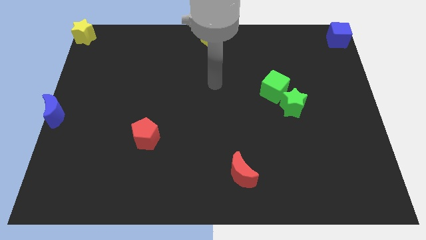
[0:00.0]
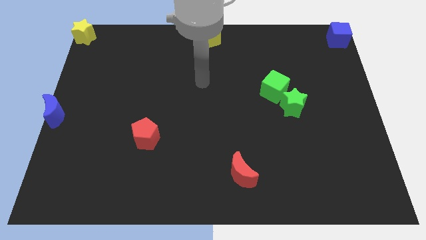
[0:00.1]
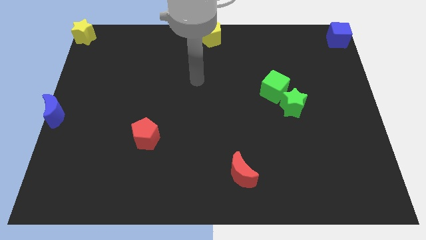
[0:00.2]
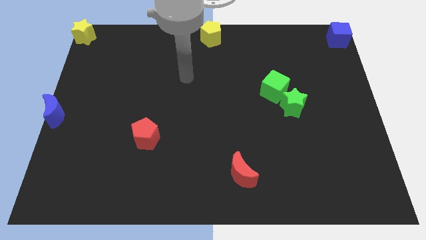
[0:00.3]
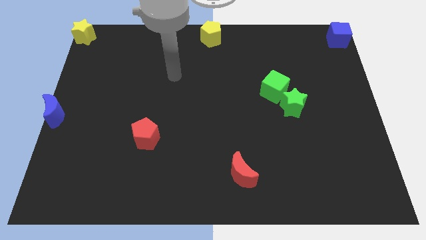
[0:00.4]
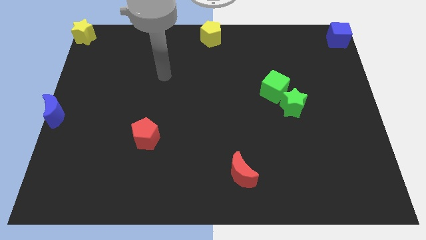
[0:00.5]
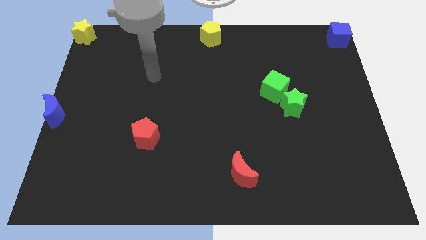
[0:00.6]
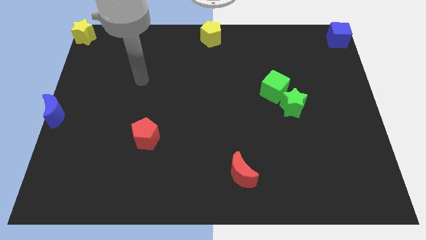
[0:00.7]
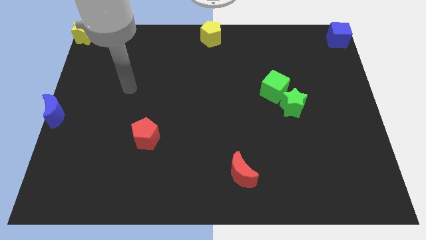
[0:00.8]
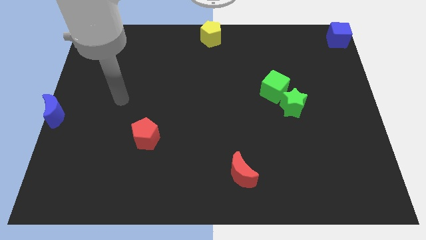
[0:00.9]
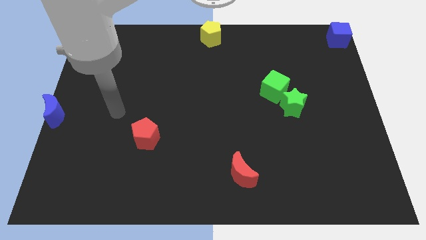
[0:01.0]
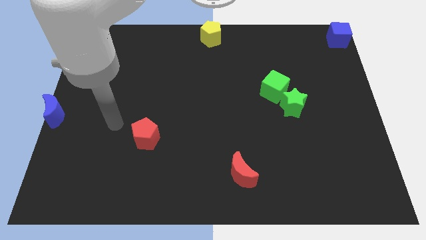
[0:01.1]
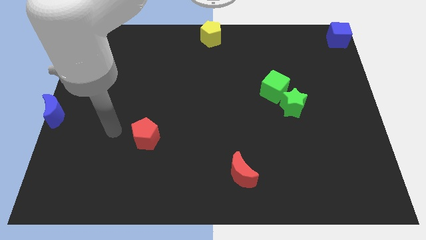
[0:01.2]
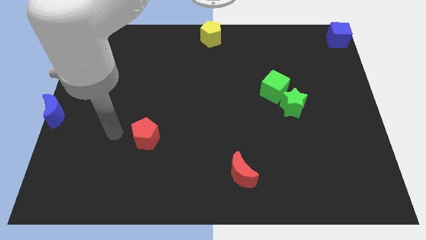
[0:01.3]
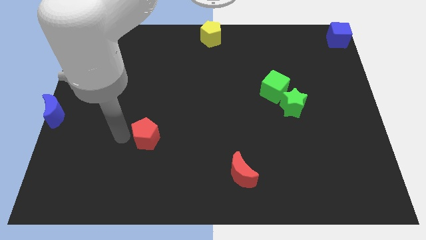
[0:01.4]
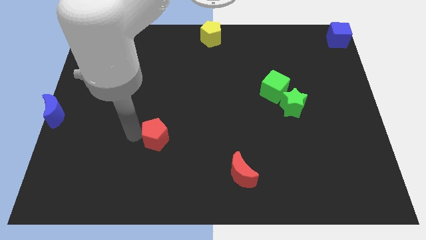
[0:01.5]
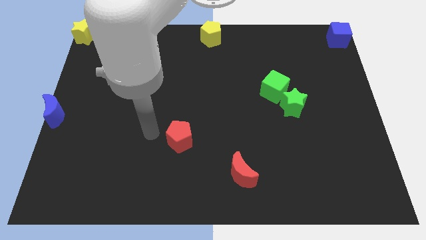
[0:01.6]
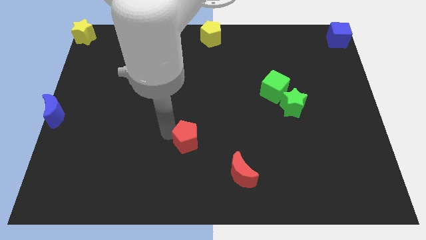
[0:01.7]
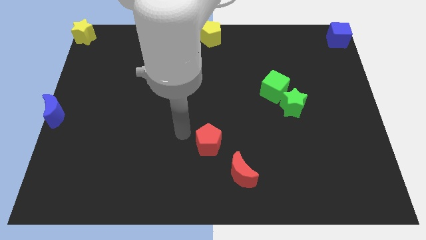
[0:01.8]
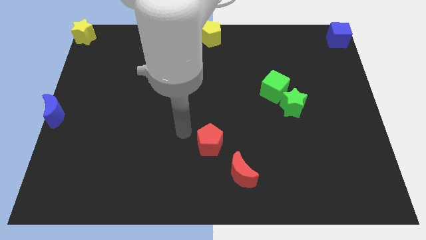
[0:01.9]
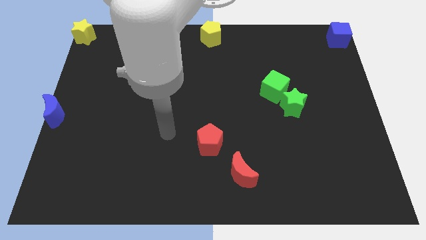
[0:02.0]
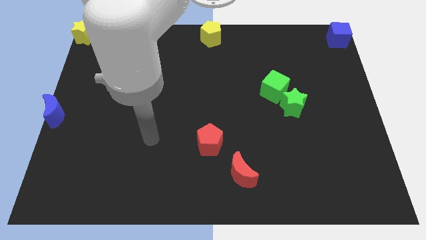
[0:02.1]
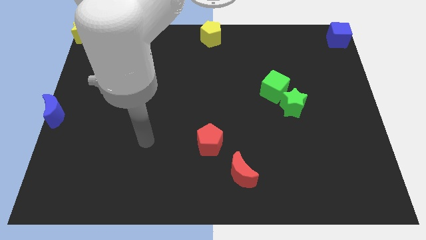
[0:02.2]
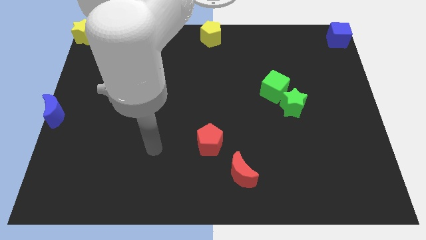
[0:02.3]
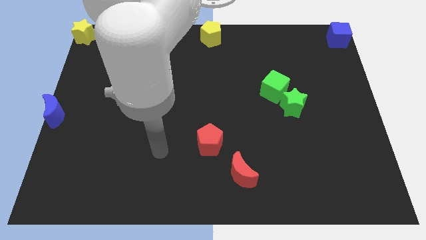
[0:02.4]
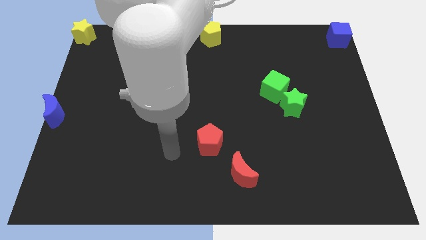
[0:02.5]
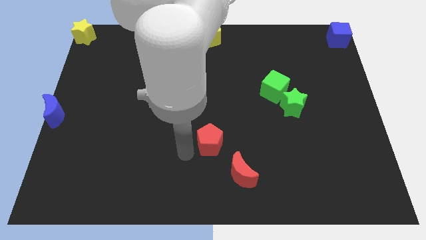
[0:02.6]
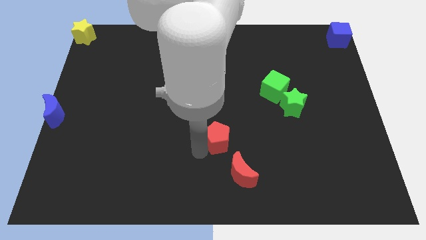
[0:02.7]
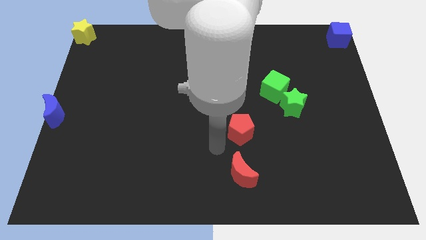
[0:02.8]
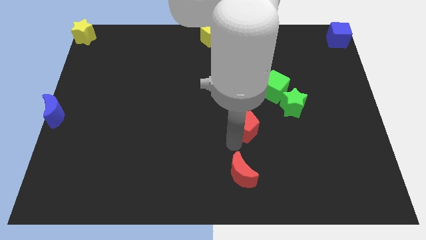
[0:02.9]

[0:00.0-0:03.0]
move red pentagon above the red moon

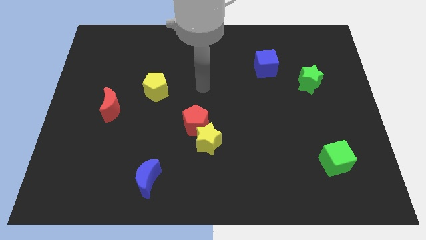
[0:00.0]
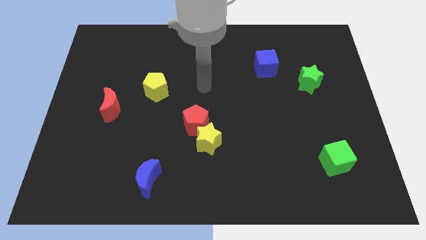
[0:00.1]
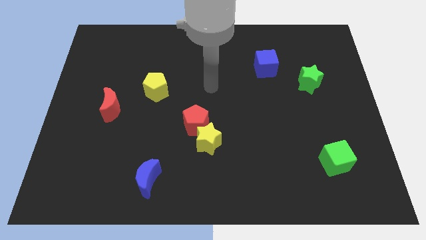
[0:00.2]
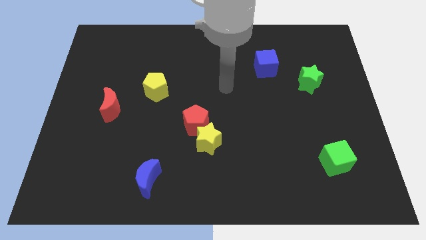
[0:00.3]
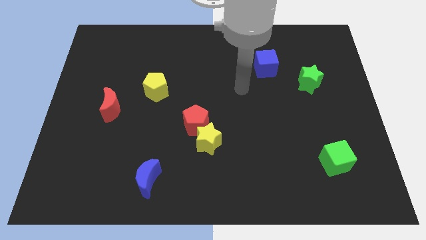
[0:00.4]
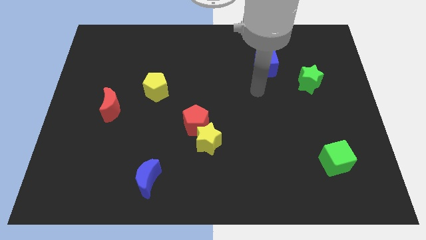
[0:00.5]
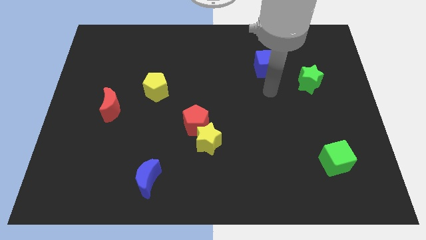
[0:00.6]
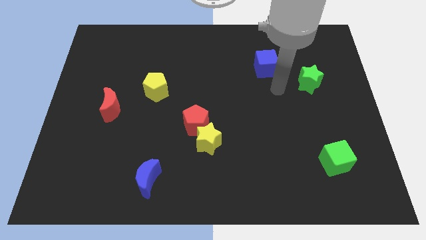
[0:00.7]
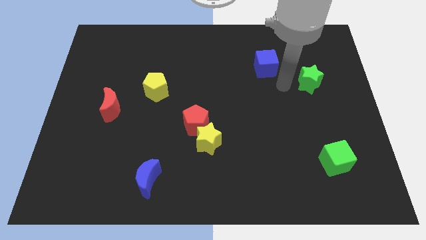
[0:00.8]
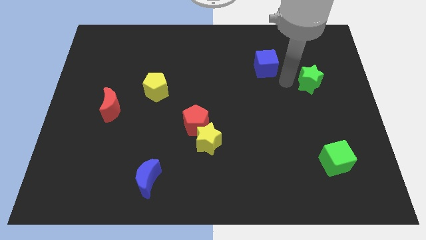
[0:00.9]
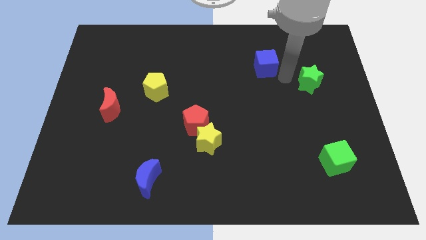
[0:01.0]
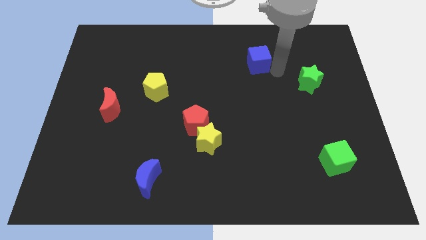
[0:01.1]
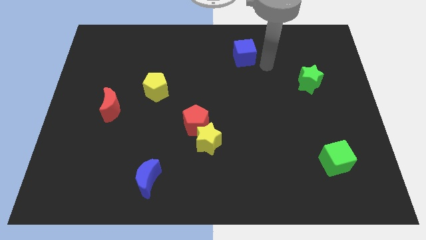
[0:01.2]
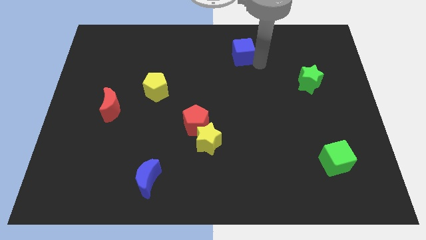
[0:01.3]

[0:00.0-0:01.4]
push the blue cube towards the top side of the board

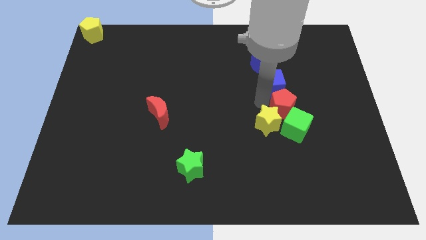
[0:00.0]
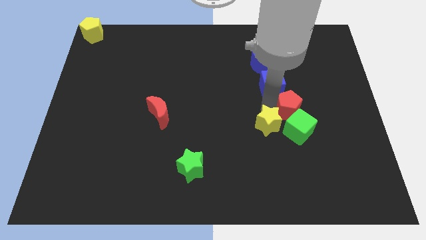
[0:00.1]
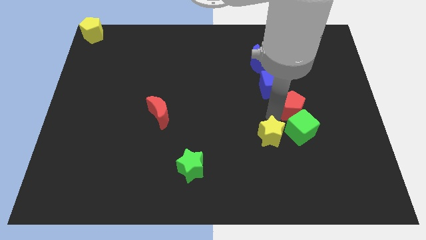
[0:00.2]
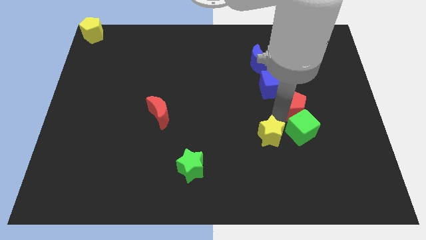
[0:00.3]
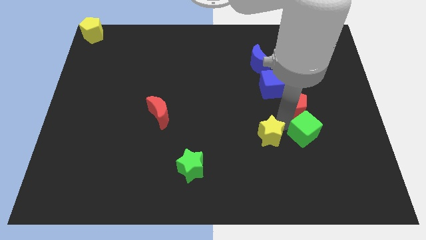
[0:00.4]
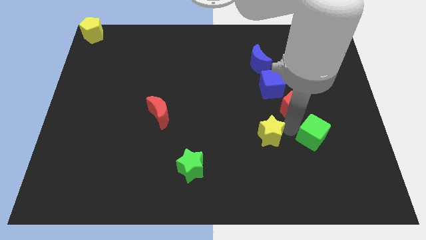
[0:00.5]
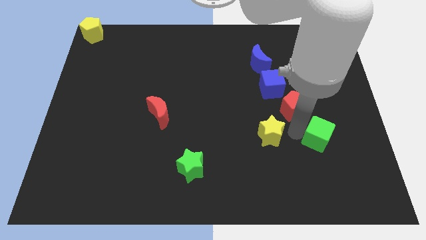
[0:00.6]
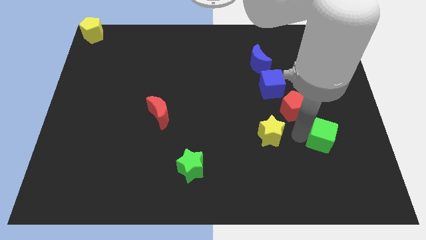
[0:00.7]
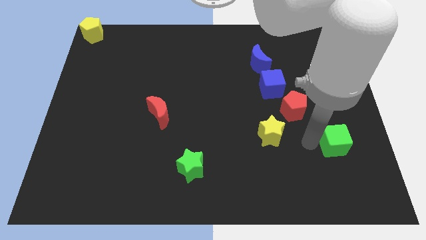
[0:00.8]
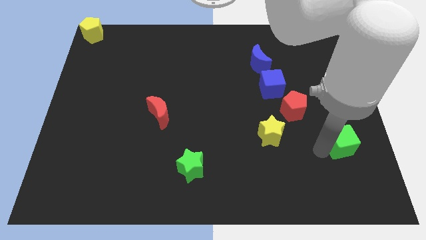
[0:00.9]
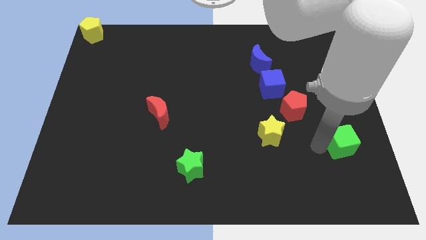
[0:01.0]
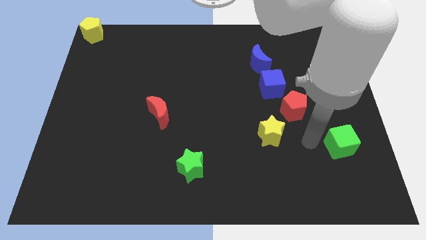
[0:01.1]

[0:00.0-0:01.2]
separate the yellow star and green cube from the red pentagon

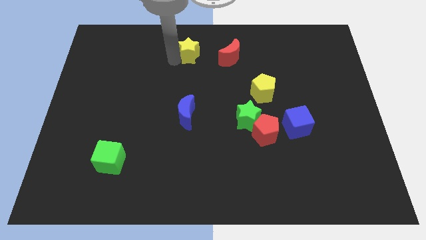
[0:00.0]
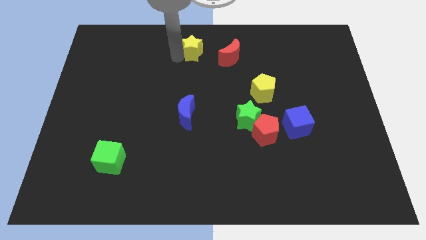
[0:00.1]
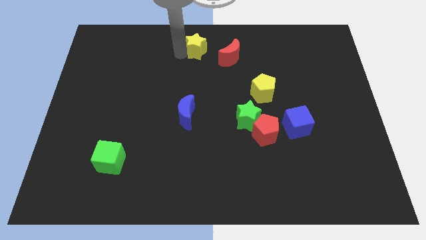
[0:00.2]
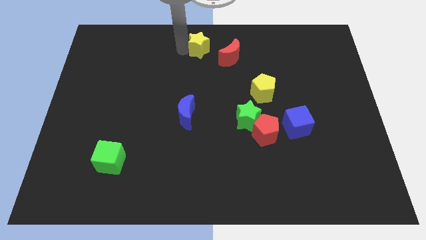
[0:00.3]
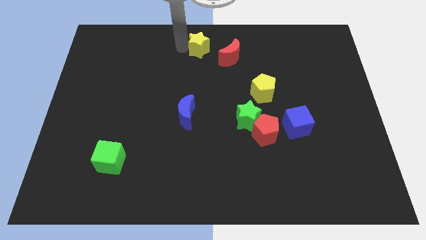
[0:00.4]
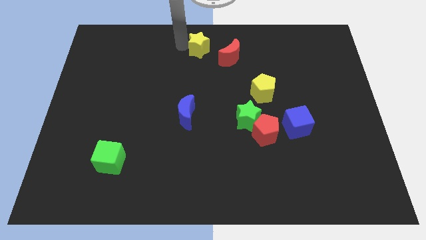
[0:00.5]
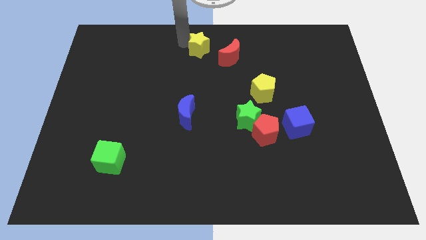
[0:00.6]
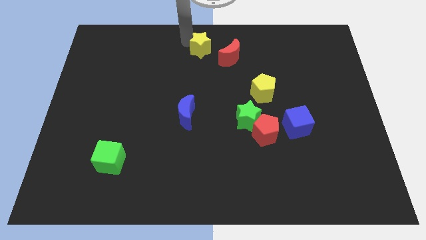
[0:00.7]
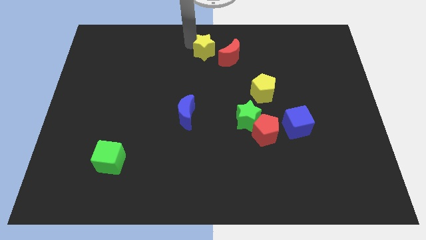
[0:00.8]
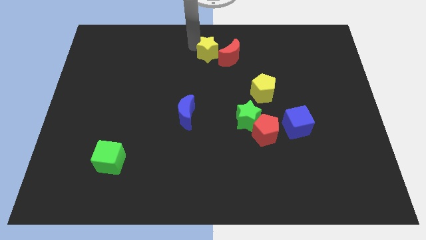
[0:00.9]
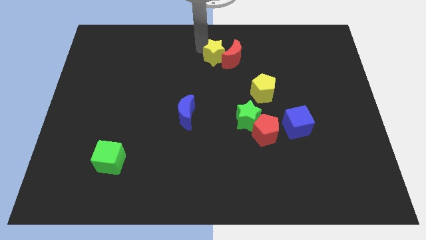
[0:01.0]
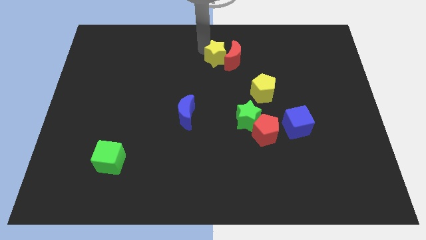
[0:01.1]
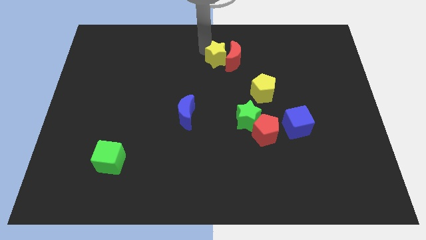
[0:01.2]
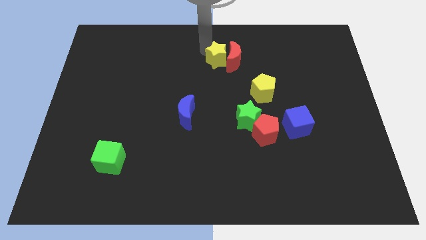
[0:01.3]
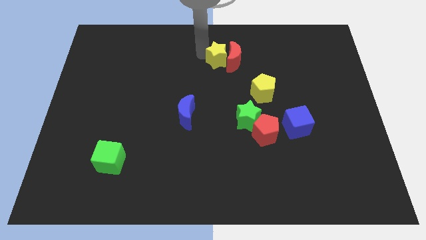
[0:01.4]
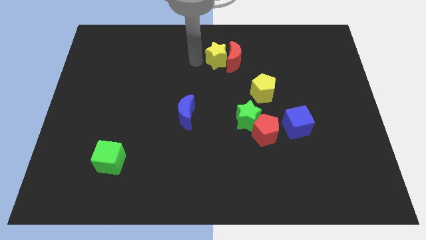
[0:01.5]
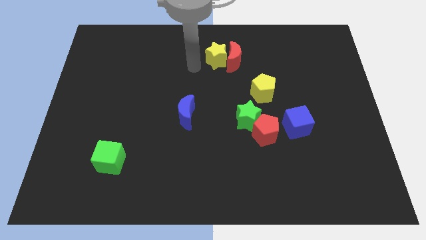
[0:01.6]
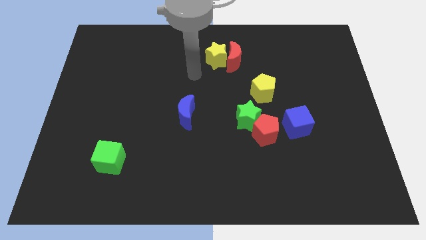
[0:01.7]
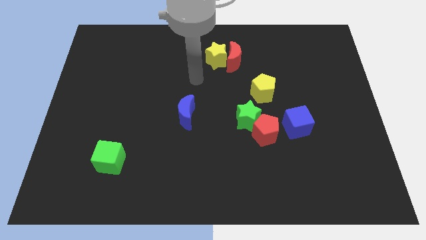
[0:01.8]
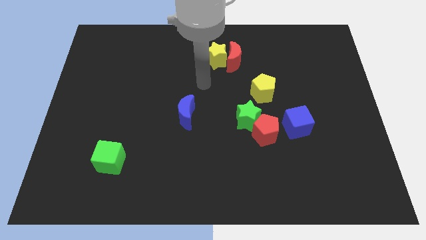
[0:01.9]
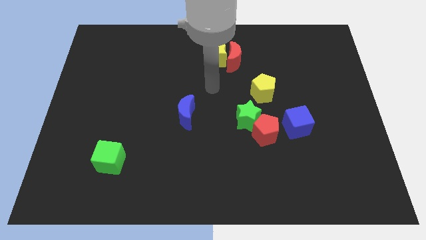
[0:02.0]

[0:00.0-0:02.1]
put the yellow star into the red moon

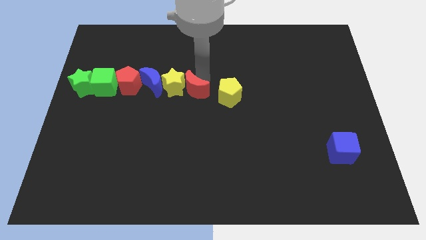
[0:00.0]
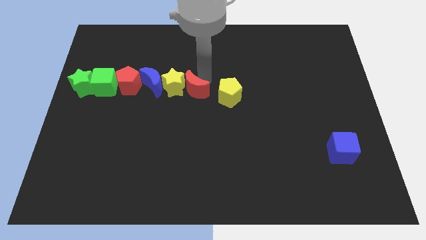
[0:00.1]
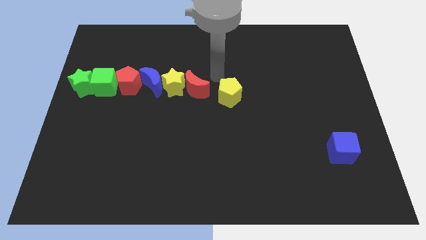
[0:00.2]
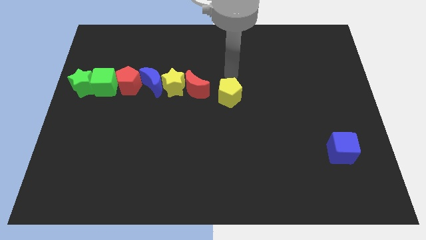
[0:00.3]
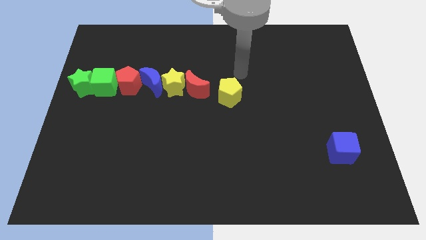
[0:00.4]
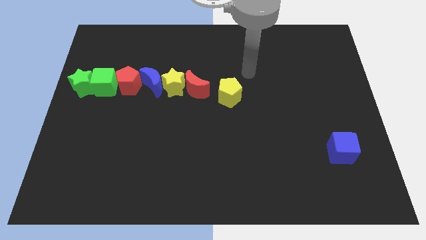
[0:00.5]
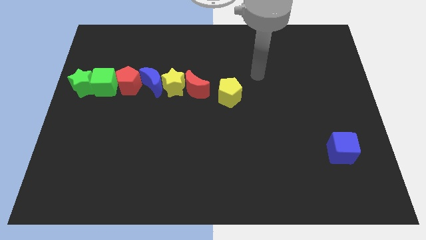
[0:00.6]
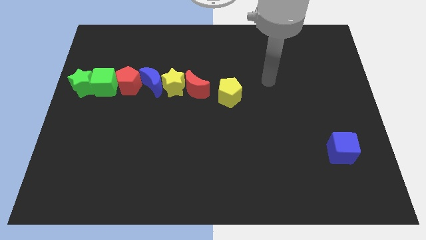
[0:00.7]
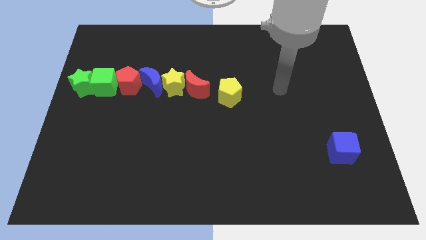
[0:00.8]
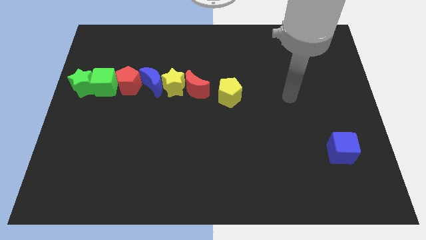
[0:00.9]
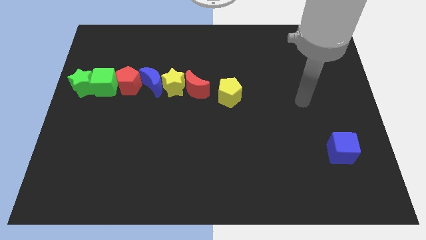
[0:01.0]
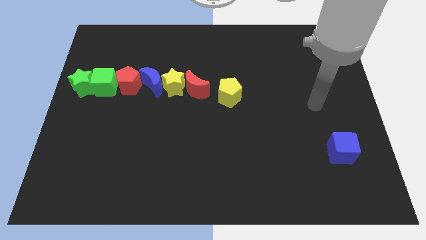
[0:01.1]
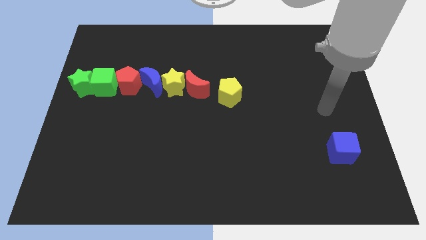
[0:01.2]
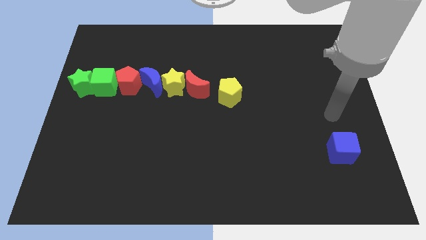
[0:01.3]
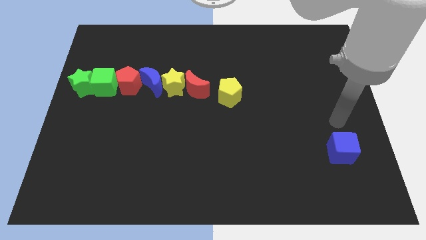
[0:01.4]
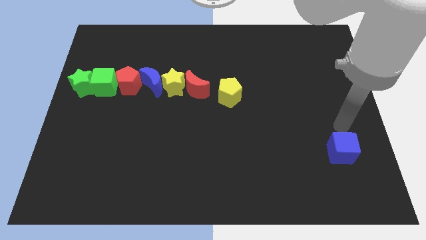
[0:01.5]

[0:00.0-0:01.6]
move your arm away from the red crescent
